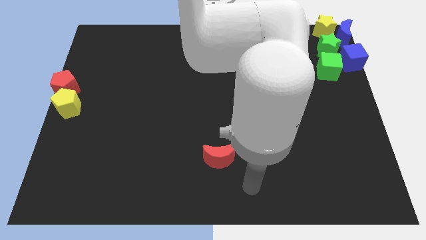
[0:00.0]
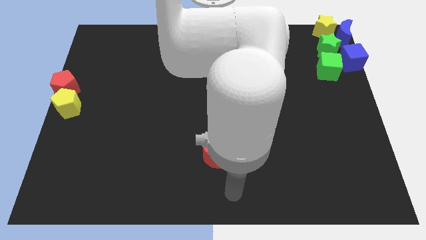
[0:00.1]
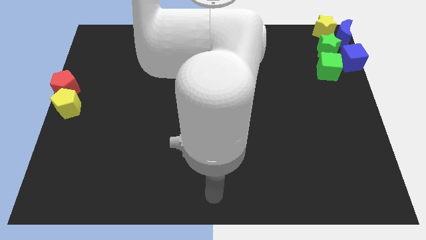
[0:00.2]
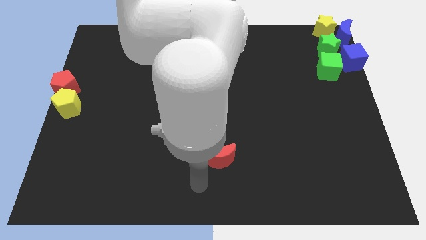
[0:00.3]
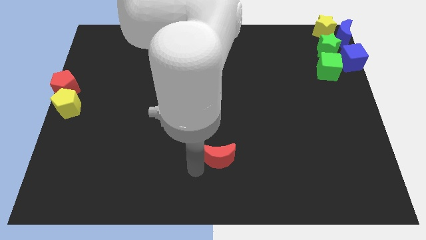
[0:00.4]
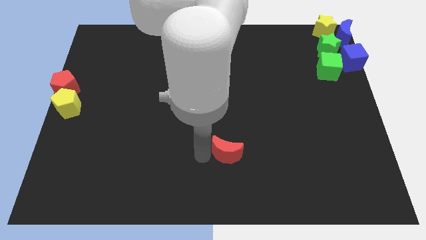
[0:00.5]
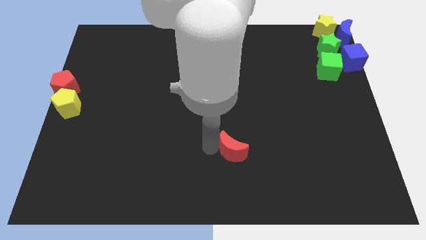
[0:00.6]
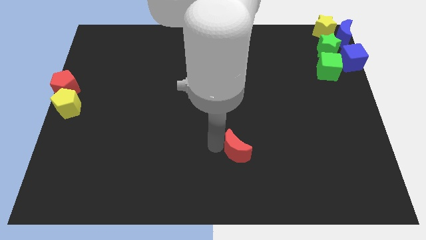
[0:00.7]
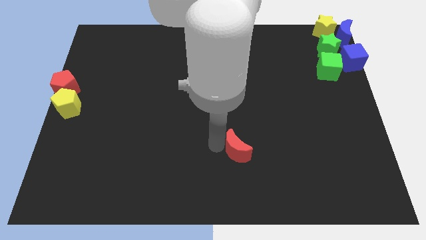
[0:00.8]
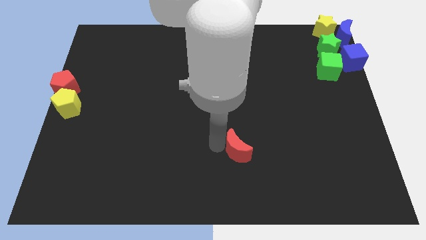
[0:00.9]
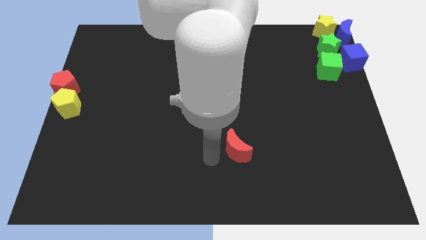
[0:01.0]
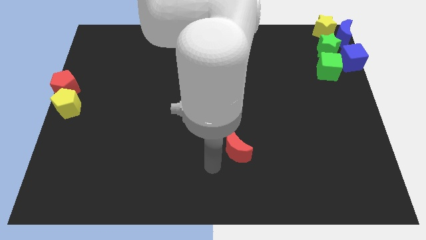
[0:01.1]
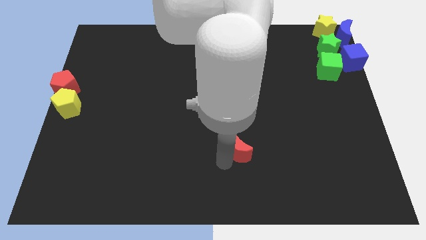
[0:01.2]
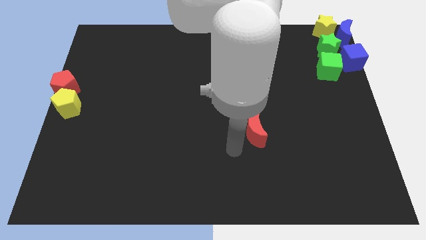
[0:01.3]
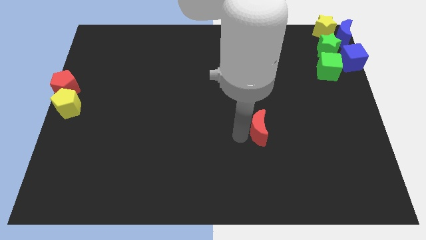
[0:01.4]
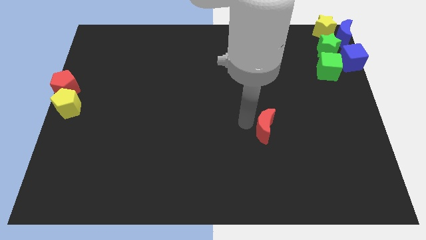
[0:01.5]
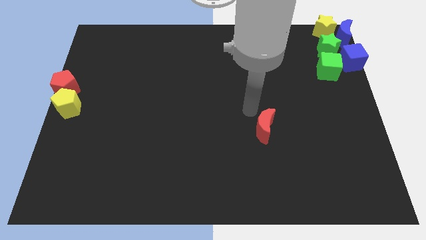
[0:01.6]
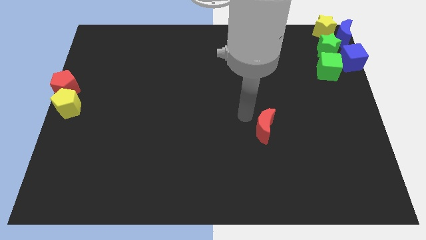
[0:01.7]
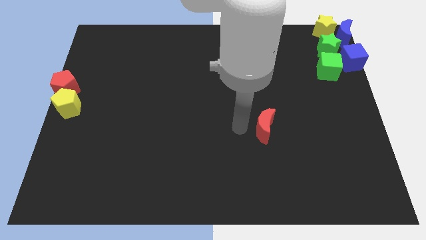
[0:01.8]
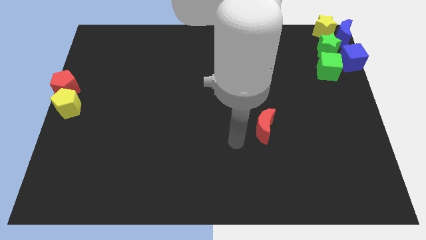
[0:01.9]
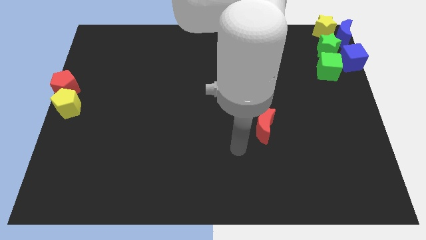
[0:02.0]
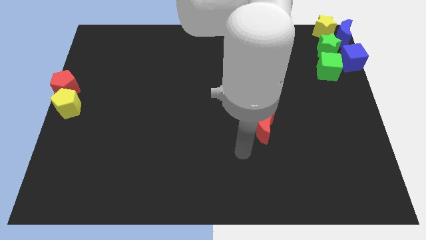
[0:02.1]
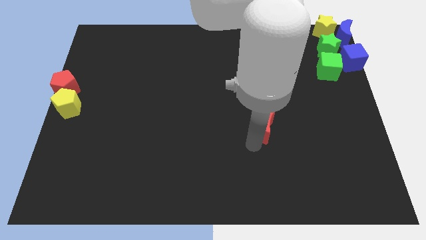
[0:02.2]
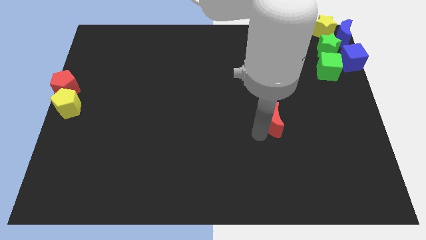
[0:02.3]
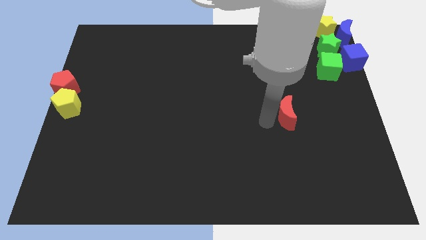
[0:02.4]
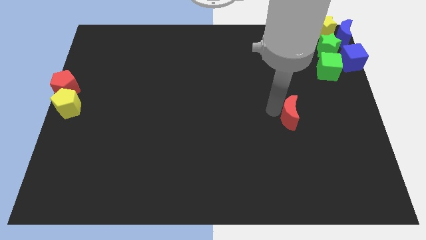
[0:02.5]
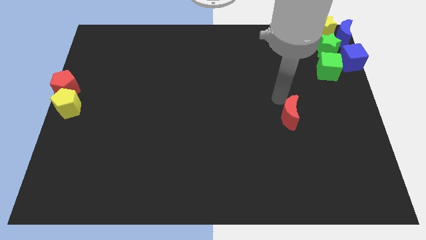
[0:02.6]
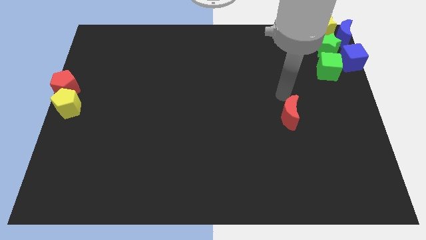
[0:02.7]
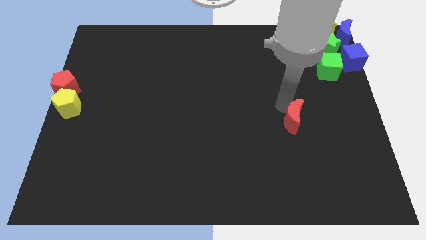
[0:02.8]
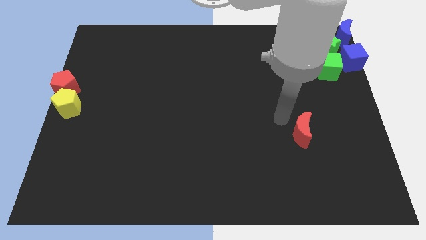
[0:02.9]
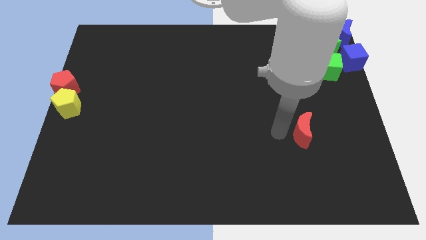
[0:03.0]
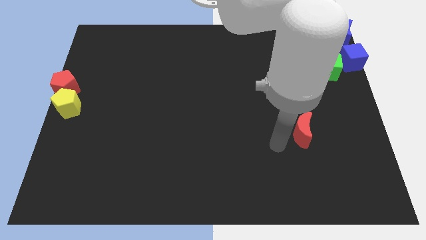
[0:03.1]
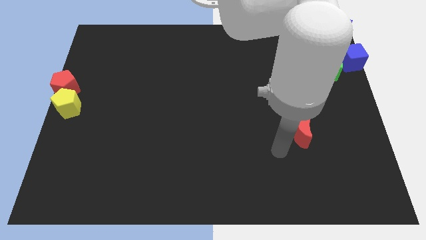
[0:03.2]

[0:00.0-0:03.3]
move the red crescent towards the right

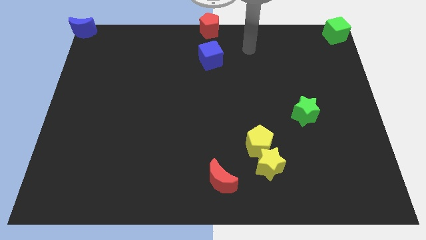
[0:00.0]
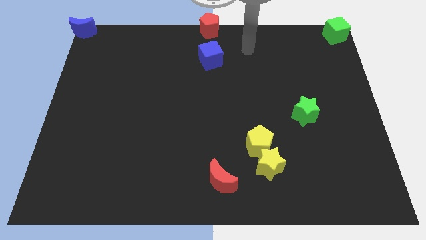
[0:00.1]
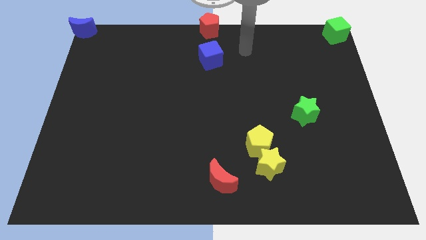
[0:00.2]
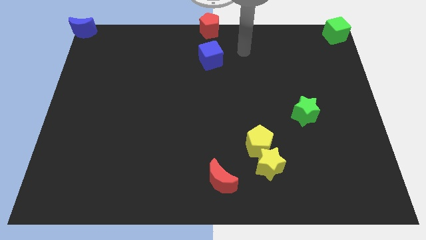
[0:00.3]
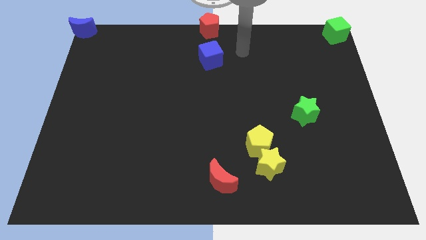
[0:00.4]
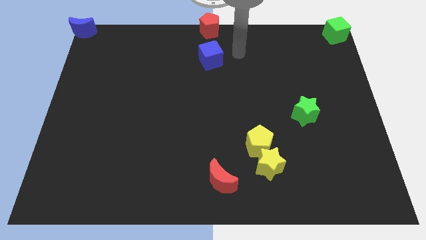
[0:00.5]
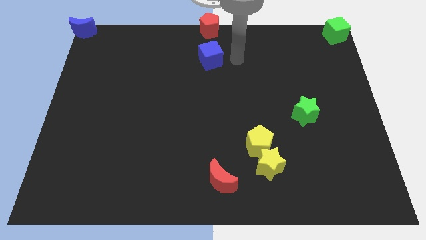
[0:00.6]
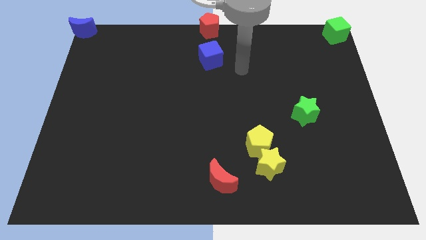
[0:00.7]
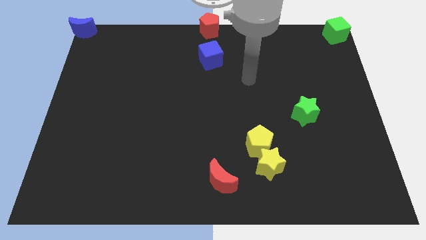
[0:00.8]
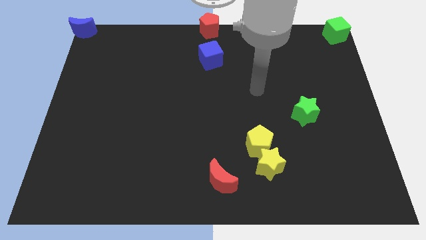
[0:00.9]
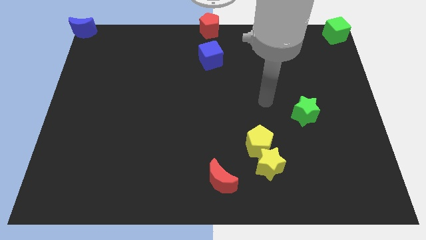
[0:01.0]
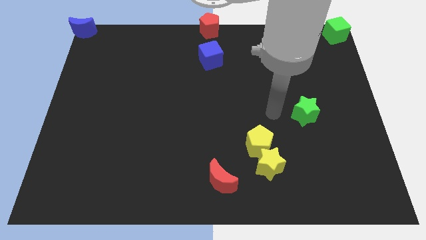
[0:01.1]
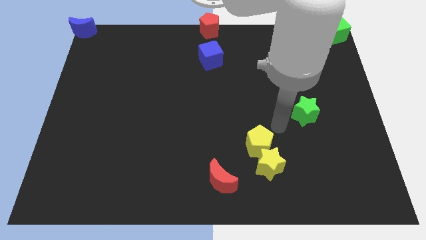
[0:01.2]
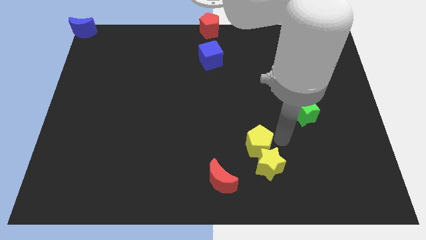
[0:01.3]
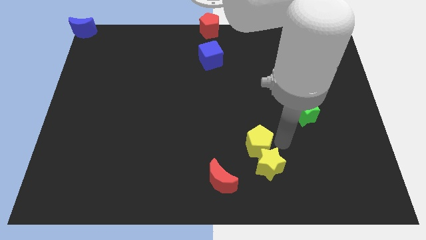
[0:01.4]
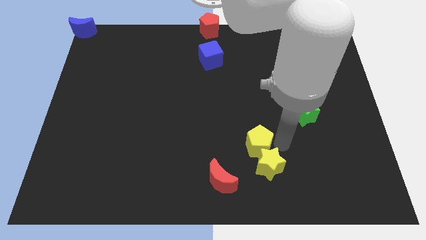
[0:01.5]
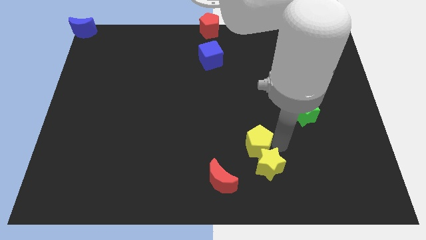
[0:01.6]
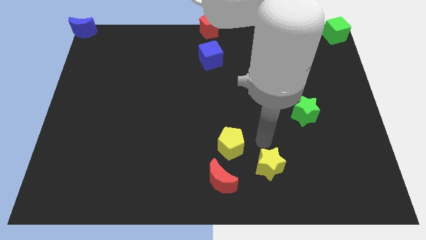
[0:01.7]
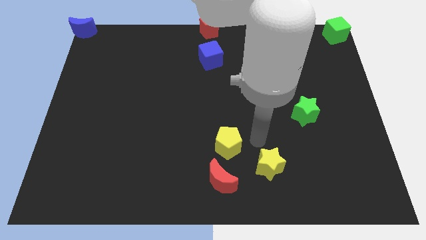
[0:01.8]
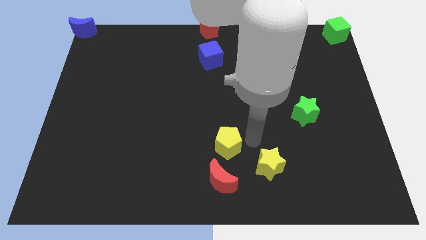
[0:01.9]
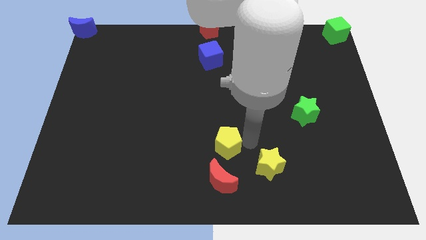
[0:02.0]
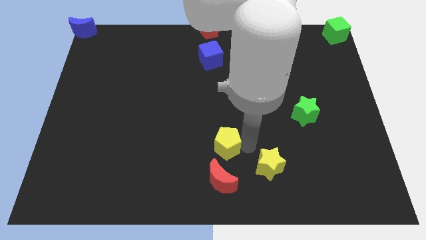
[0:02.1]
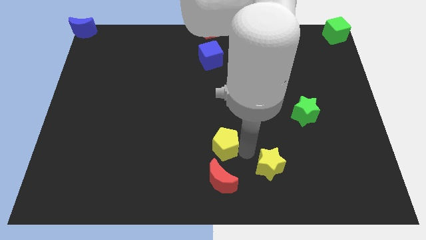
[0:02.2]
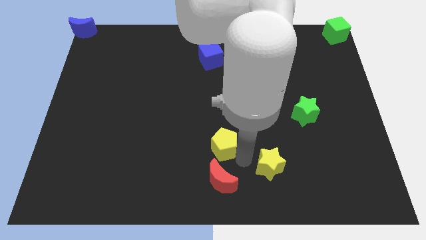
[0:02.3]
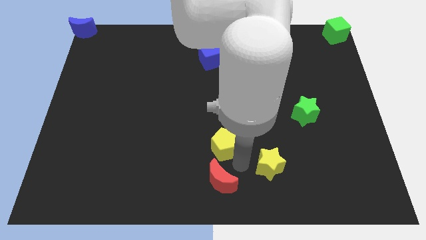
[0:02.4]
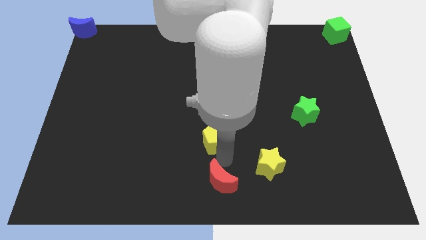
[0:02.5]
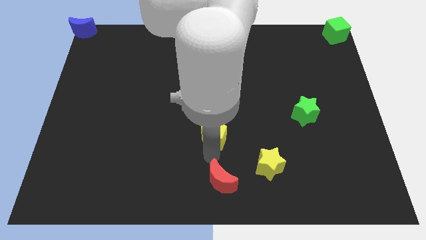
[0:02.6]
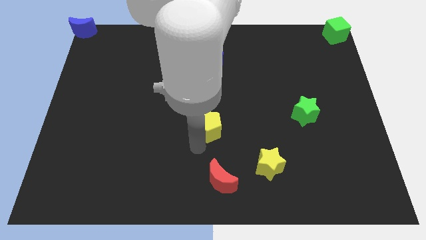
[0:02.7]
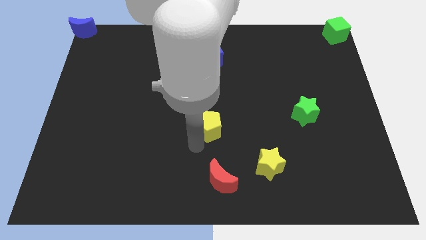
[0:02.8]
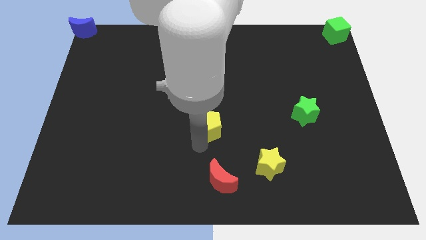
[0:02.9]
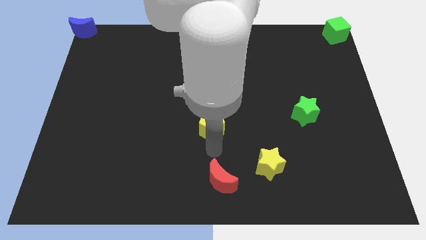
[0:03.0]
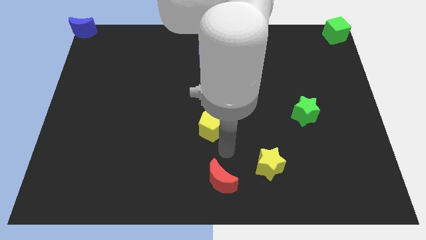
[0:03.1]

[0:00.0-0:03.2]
push the yellow pentagon to top of the red moon

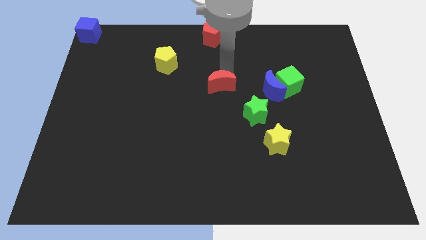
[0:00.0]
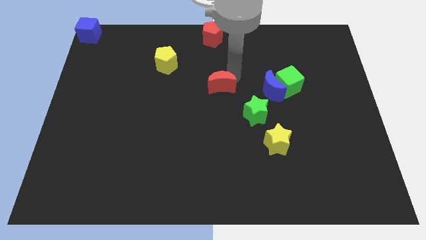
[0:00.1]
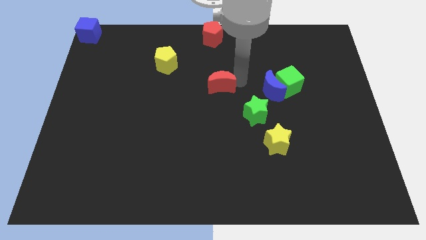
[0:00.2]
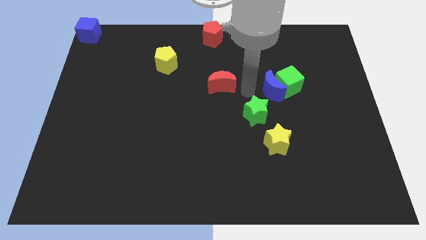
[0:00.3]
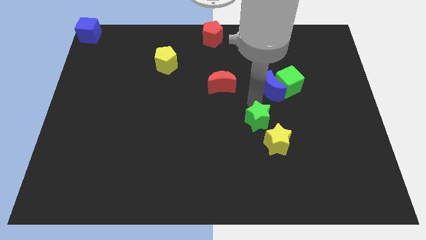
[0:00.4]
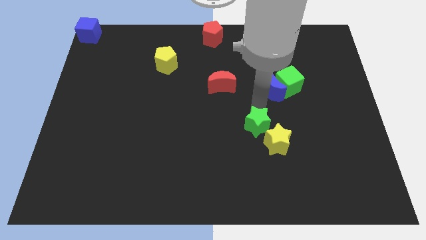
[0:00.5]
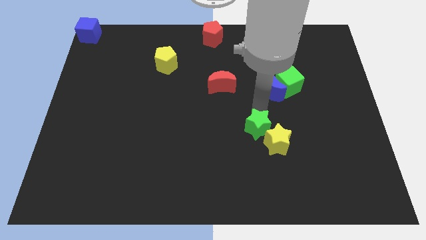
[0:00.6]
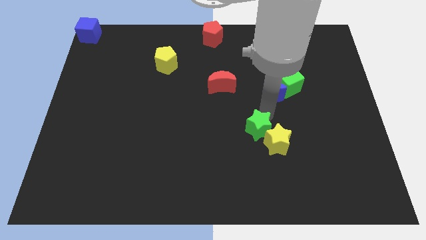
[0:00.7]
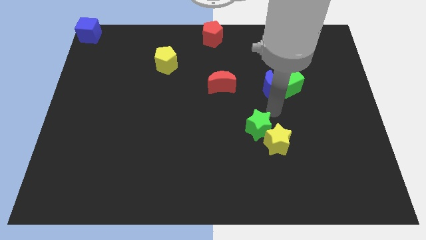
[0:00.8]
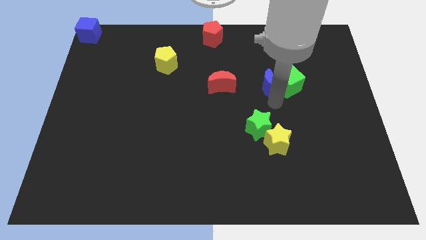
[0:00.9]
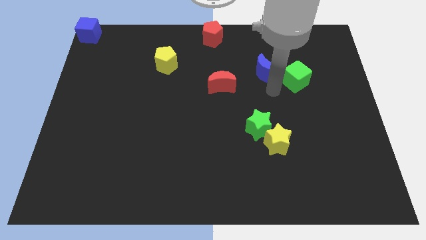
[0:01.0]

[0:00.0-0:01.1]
move the green star close to the yellow star

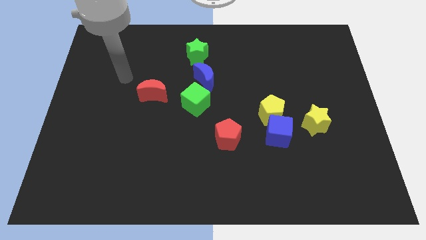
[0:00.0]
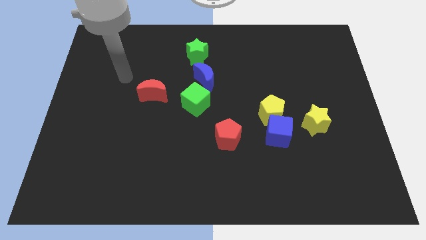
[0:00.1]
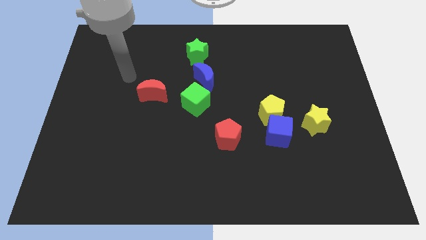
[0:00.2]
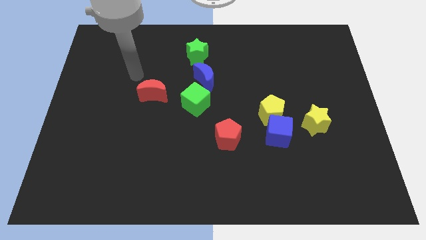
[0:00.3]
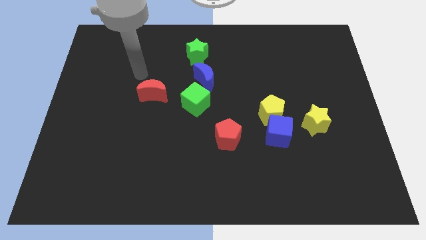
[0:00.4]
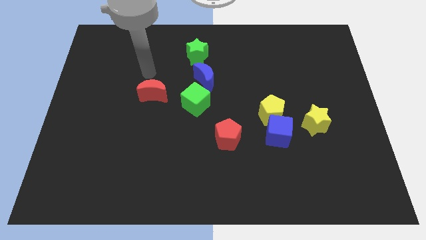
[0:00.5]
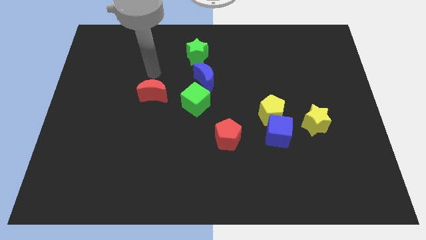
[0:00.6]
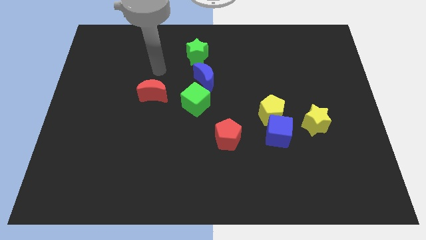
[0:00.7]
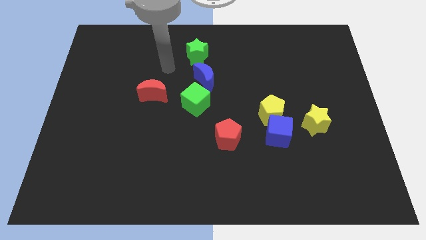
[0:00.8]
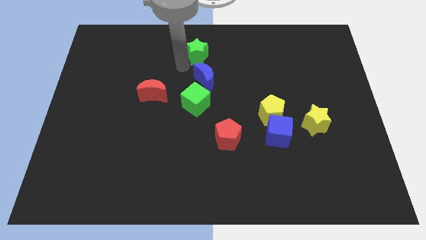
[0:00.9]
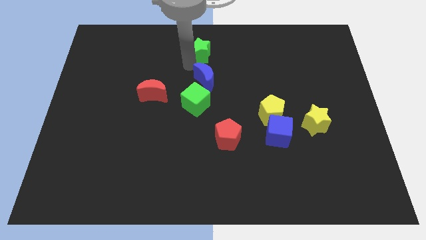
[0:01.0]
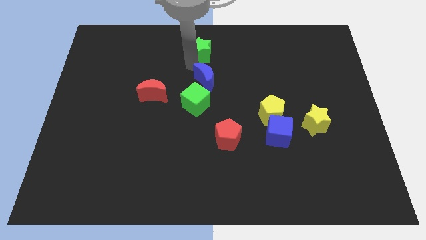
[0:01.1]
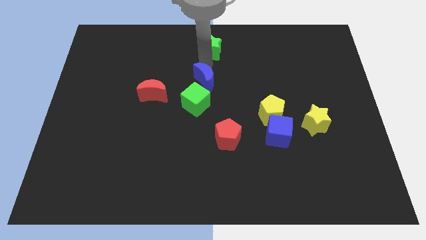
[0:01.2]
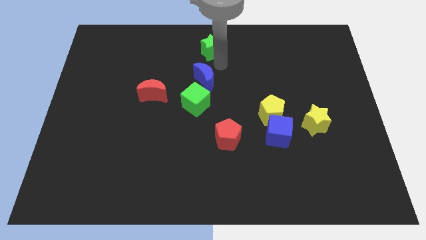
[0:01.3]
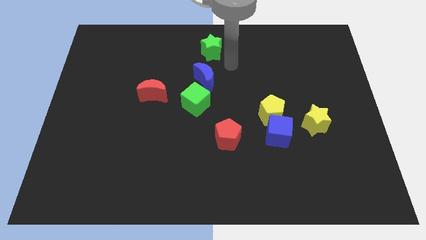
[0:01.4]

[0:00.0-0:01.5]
push the green star slightly to the top center of the board
